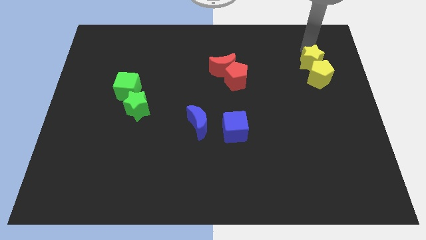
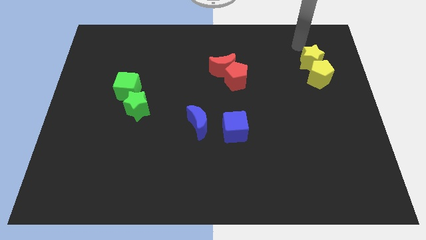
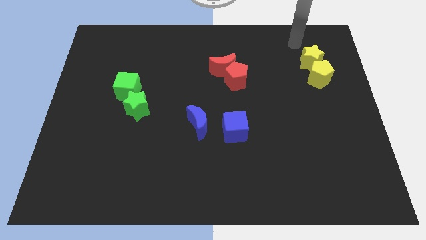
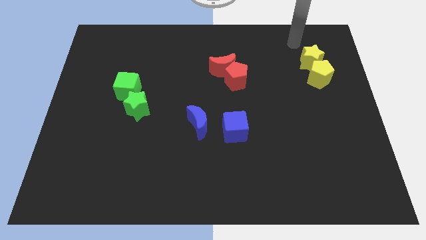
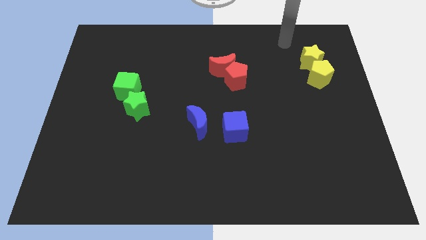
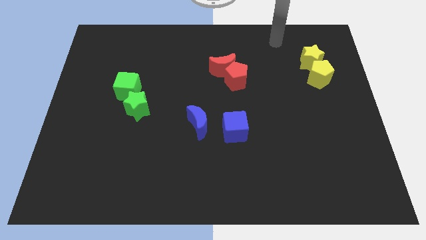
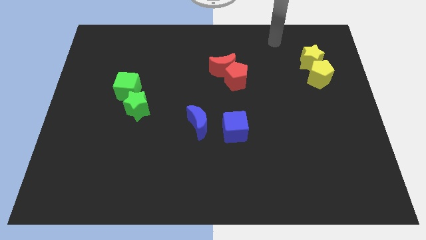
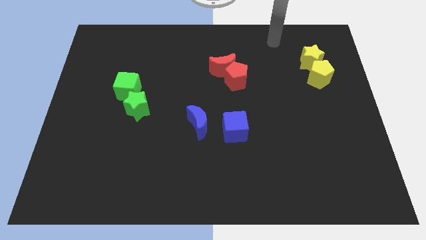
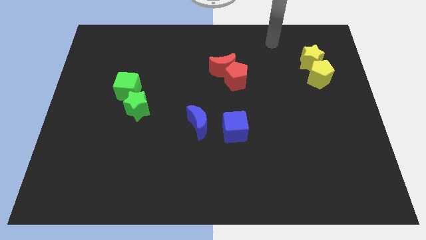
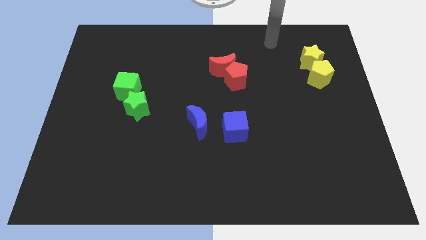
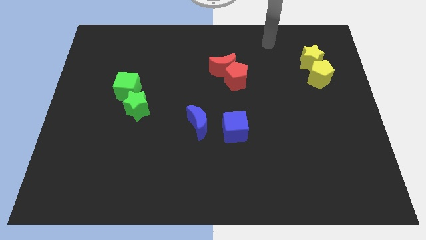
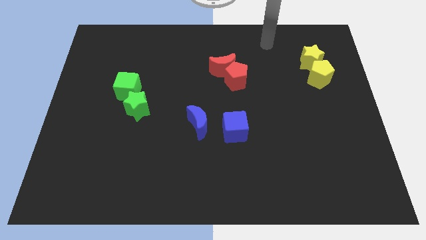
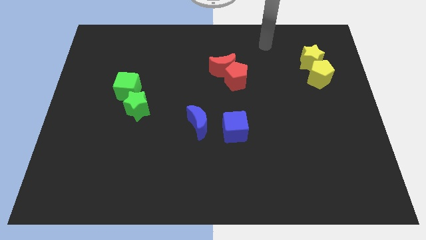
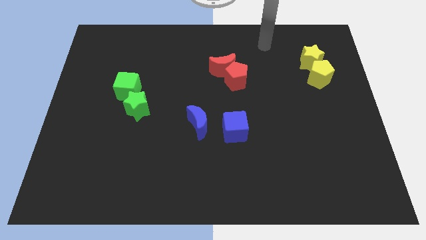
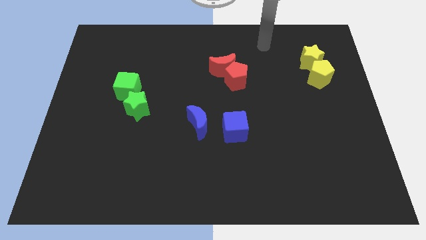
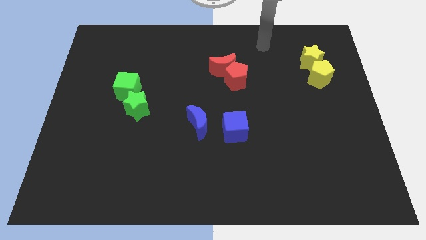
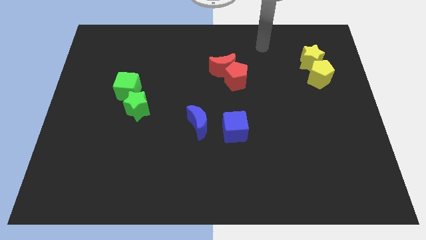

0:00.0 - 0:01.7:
move the arm away from the yellow star

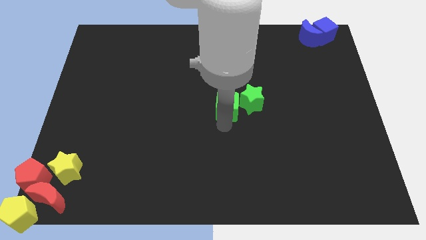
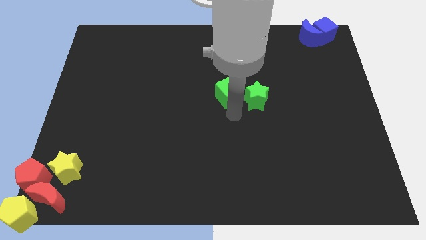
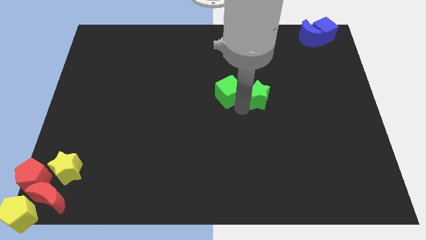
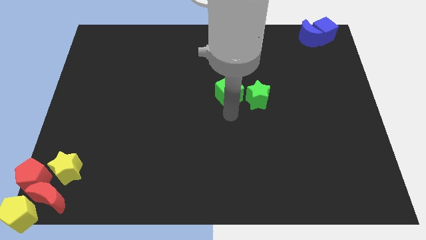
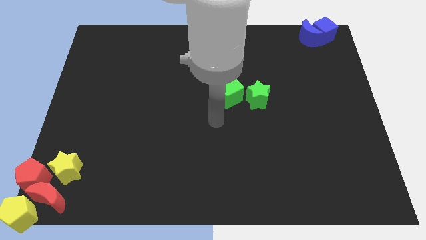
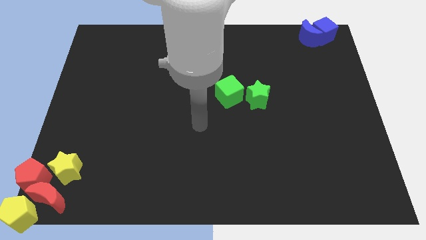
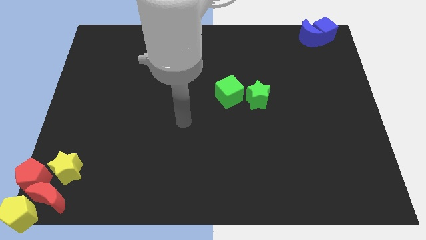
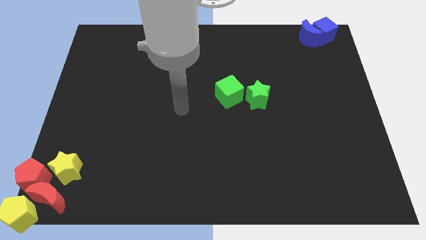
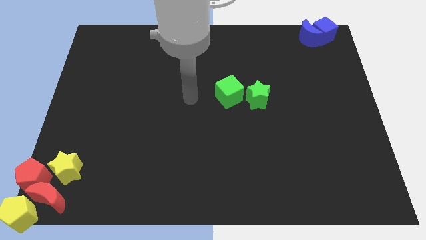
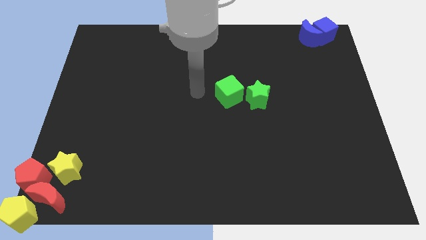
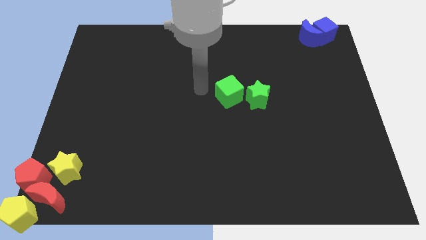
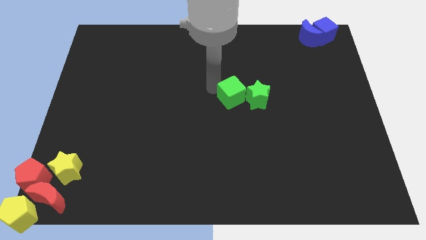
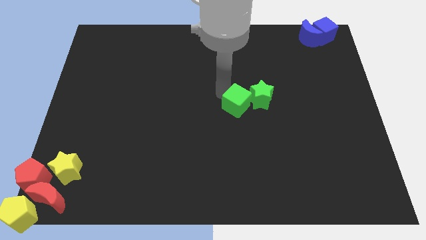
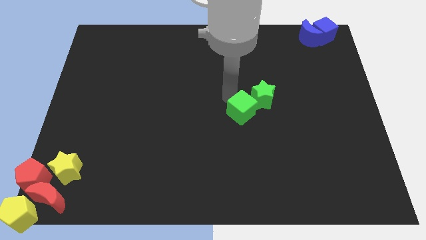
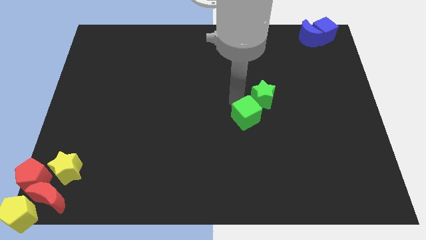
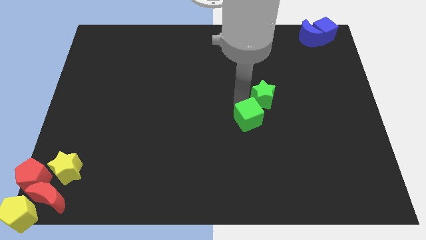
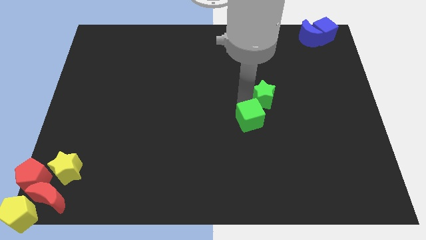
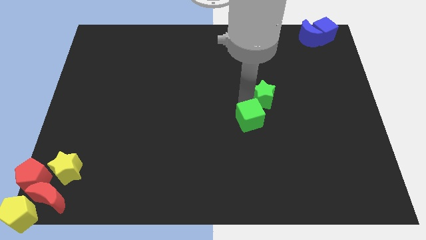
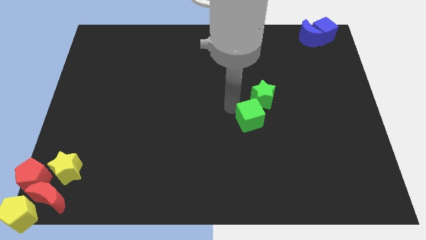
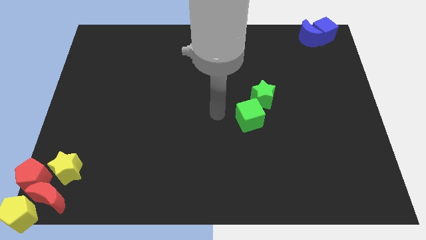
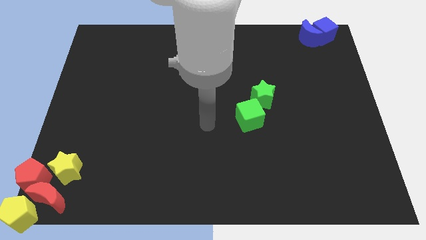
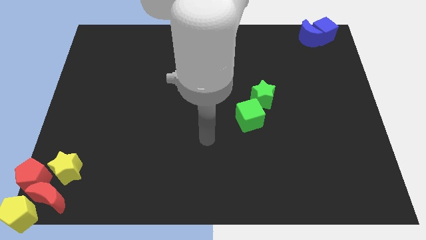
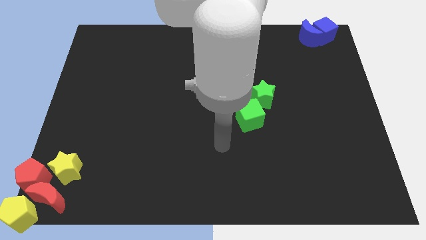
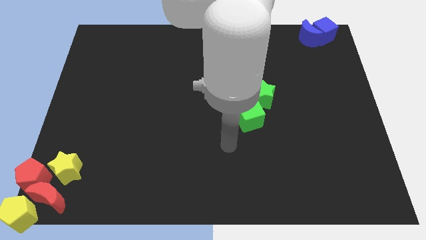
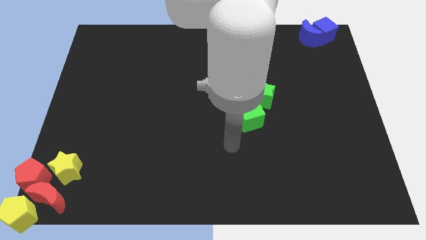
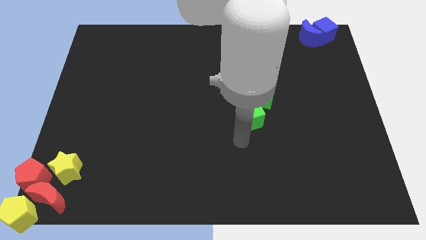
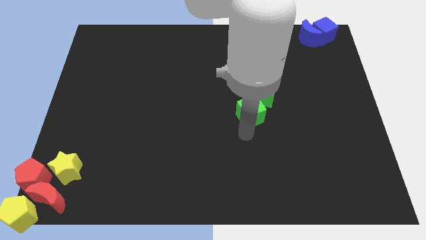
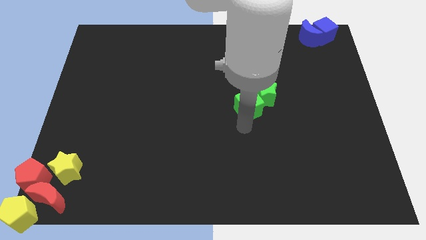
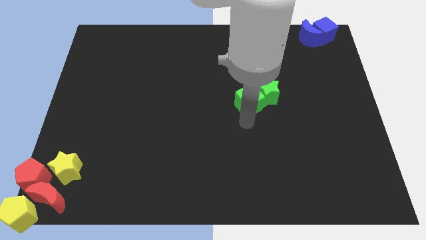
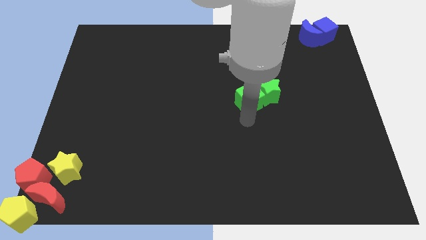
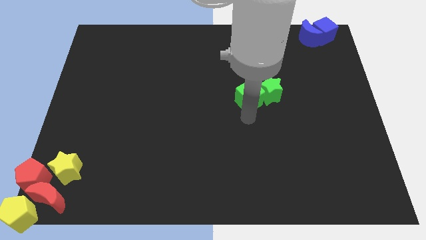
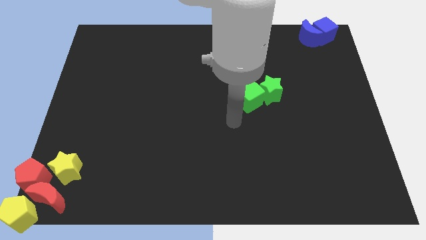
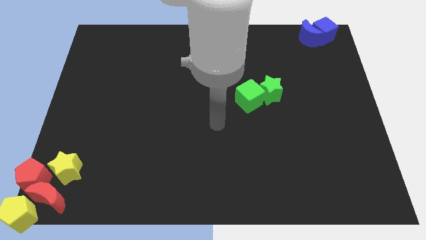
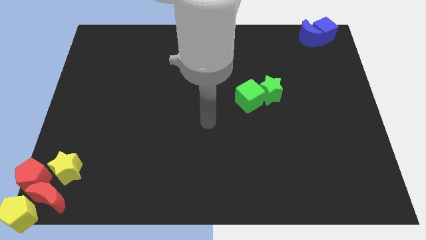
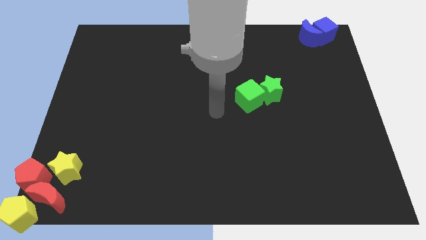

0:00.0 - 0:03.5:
place the green cube to the left of green star

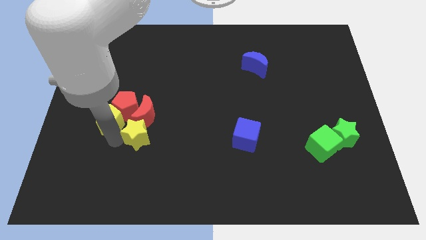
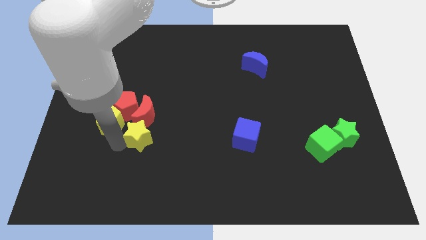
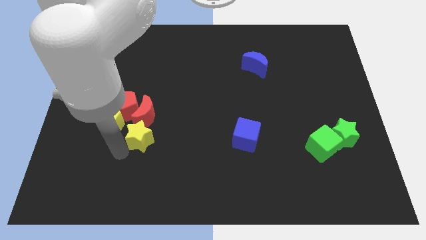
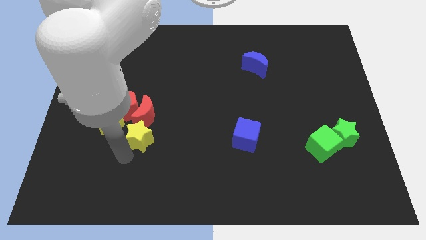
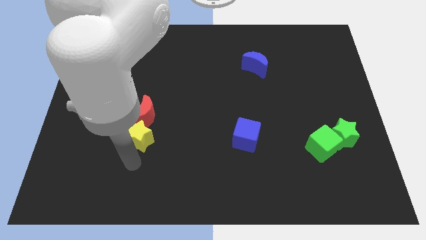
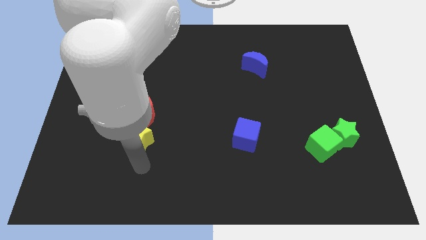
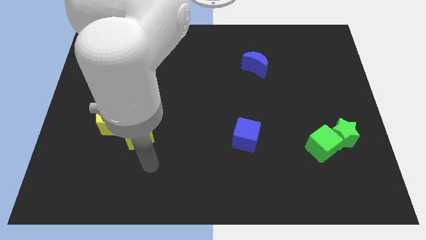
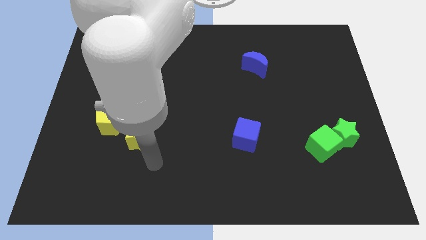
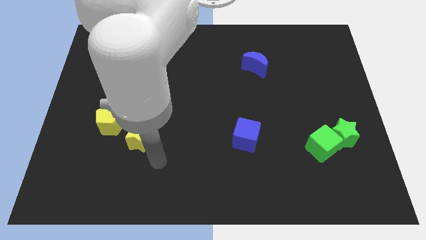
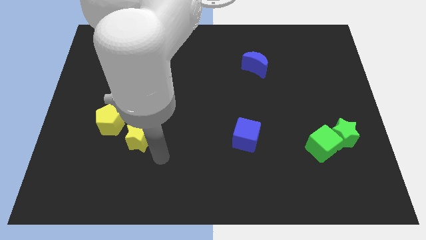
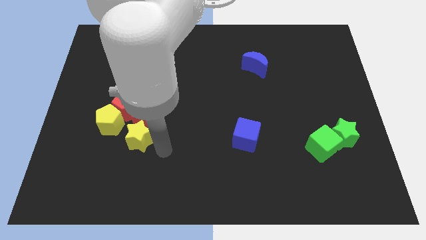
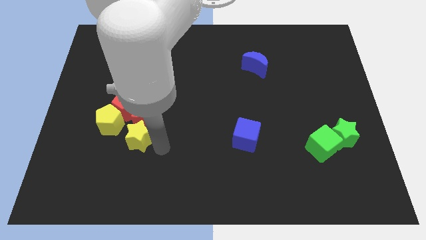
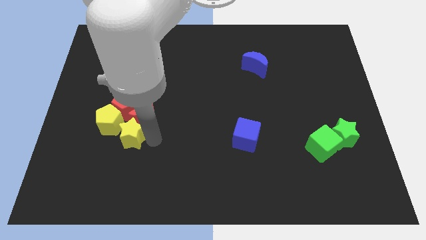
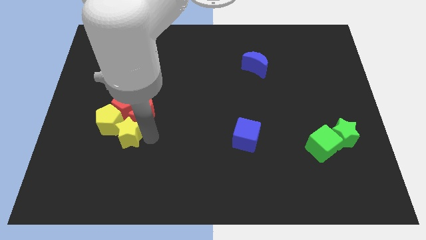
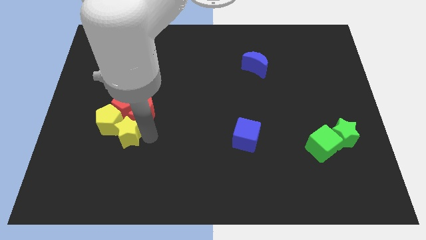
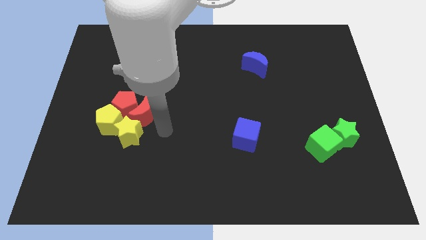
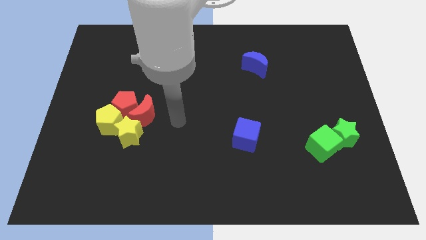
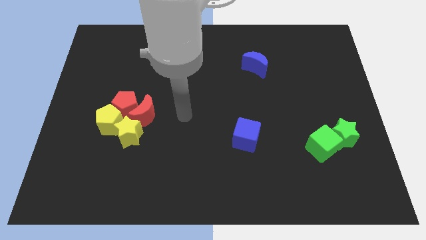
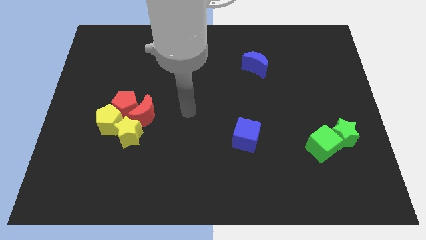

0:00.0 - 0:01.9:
move the yellow star slightly to the down of red moon

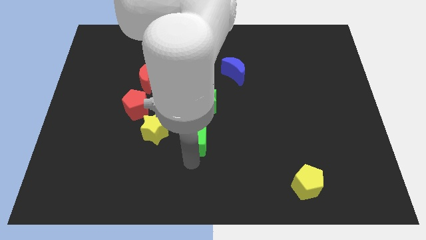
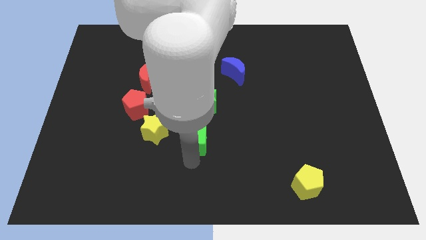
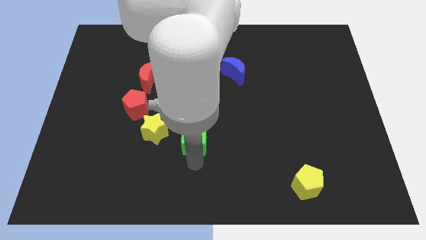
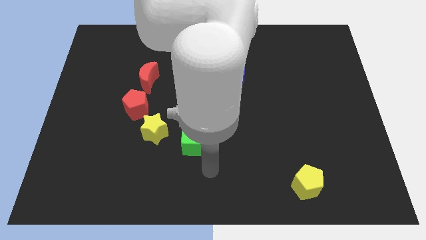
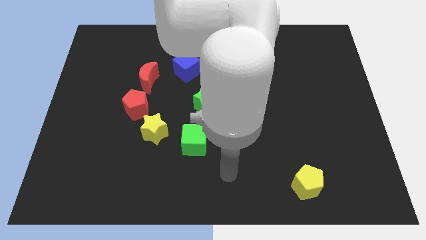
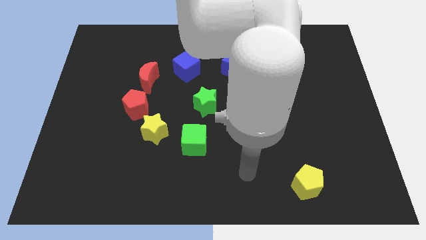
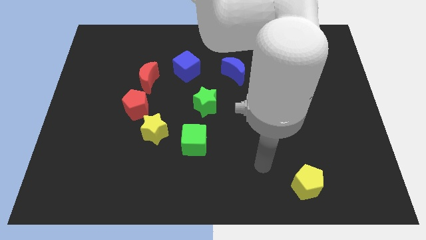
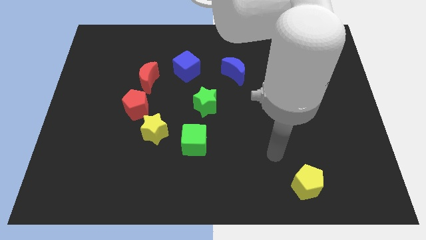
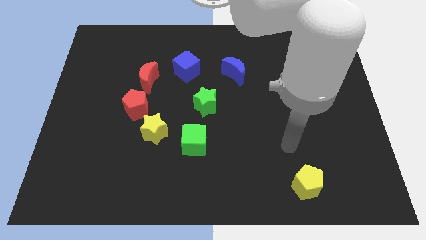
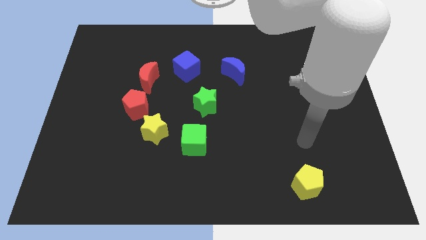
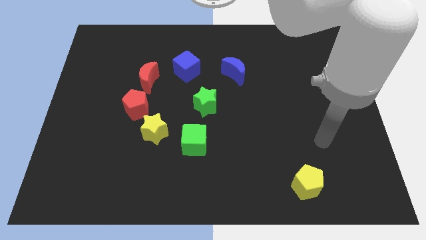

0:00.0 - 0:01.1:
move the arm away from the green cube

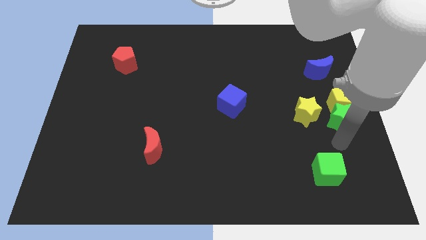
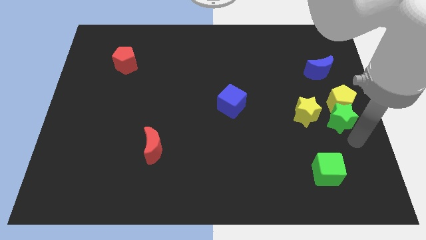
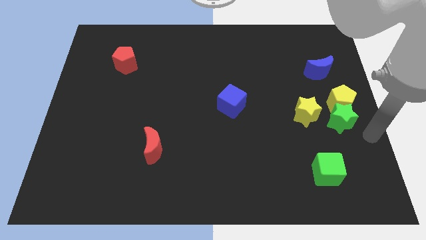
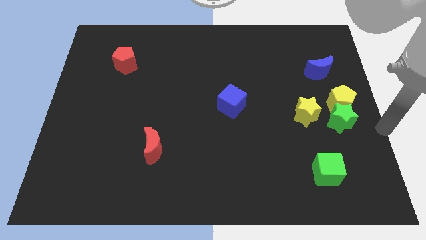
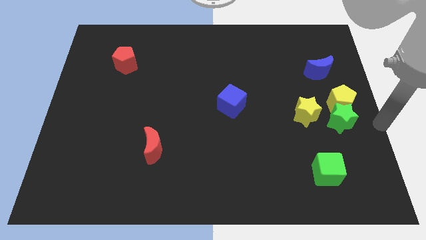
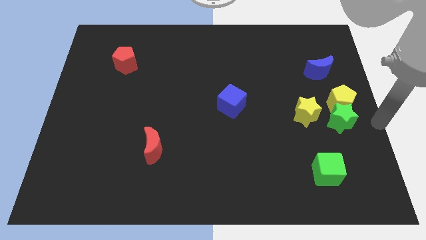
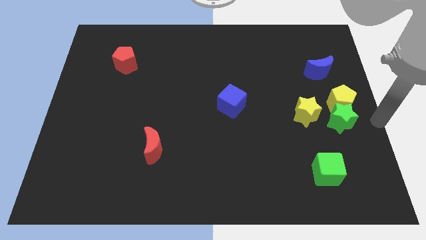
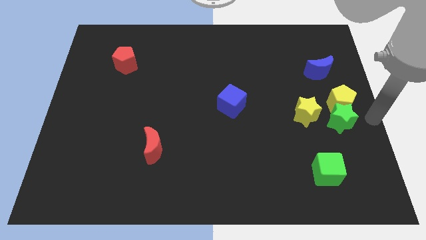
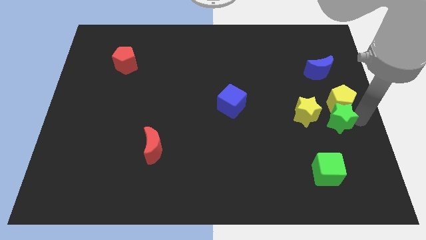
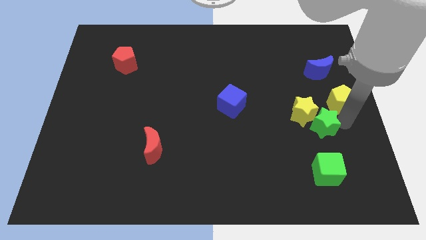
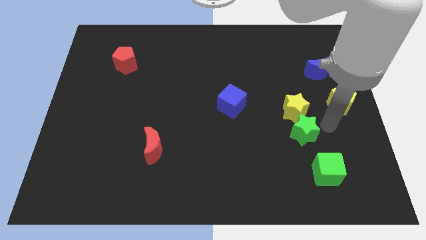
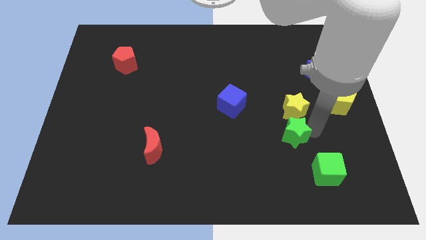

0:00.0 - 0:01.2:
push green star below yellow star
